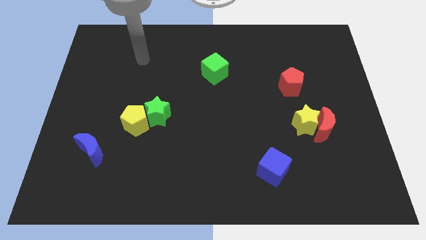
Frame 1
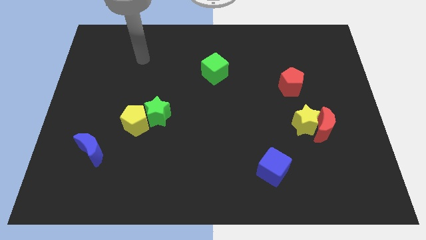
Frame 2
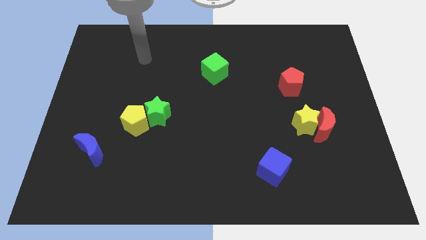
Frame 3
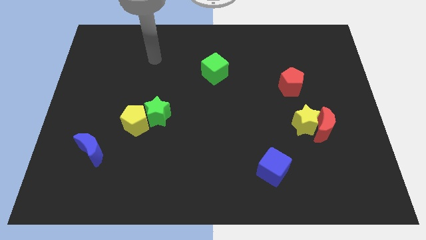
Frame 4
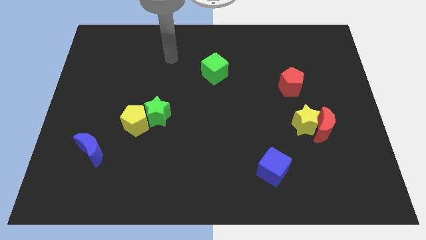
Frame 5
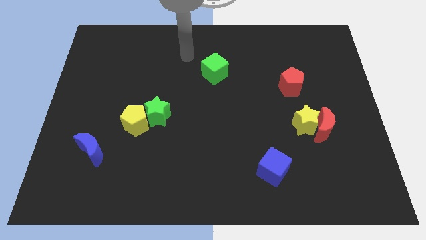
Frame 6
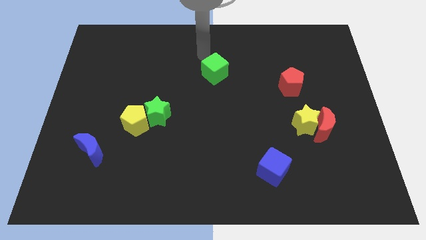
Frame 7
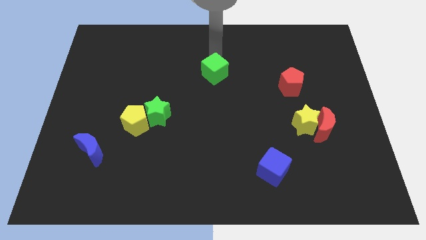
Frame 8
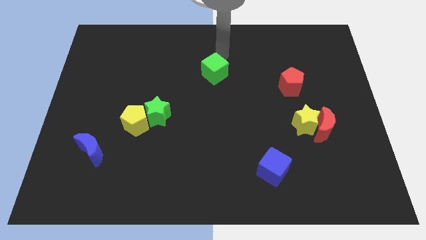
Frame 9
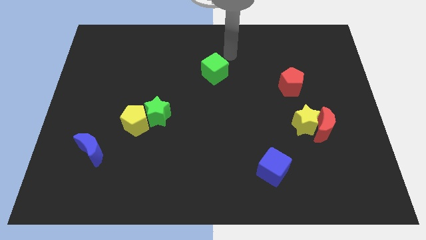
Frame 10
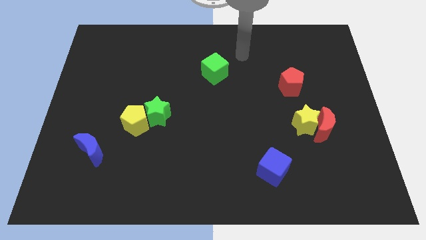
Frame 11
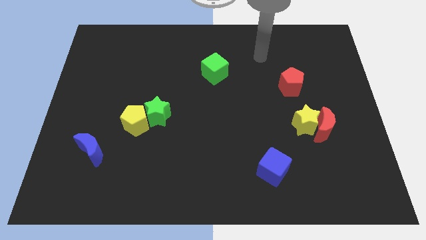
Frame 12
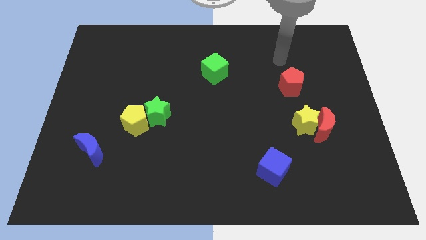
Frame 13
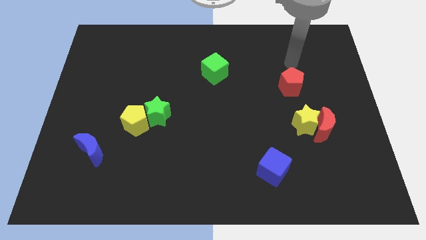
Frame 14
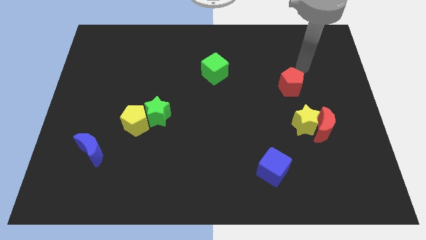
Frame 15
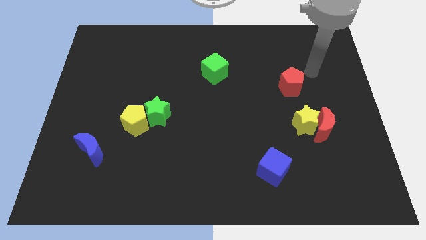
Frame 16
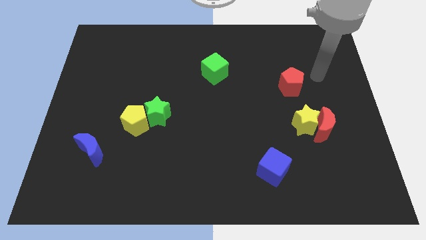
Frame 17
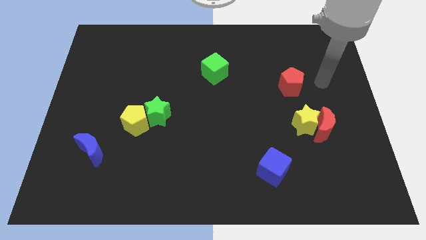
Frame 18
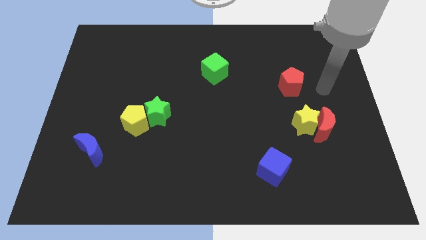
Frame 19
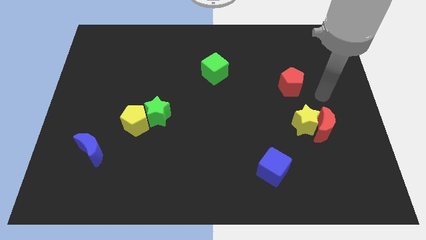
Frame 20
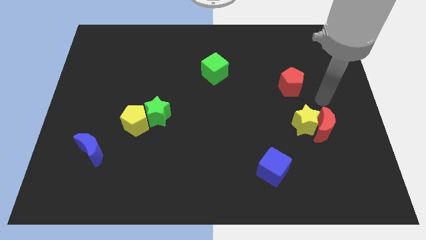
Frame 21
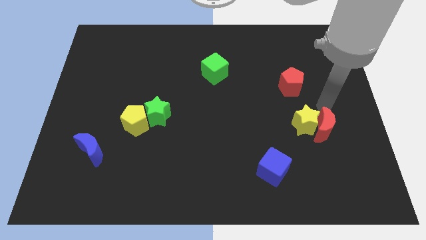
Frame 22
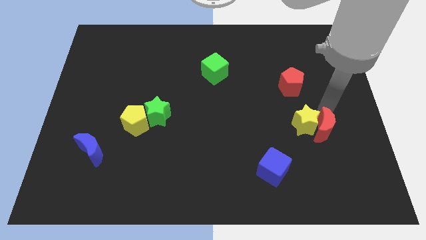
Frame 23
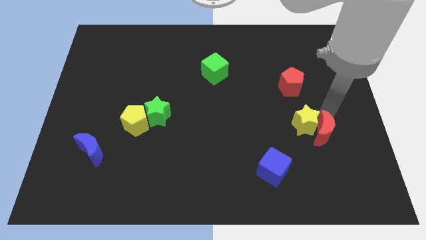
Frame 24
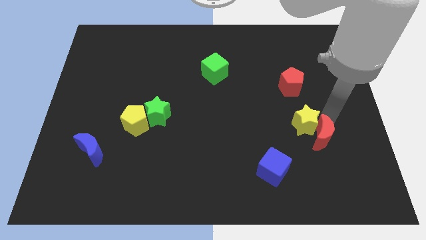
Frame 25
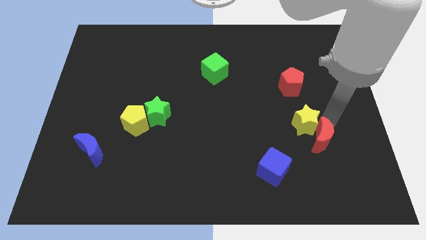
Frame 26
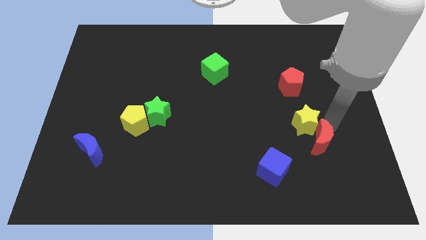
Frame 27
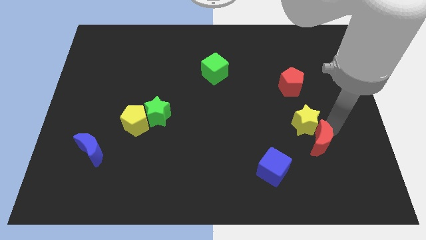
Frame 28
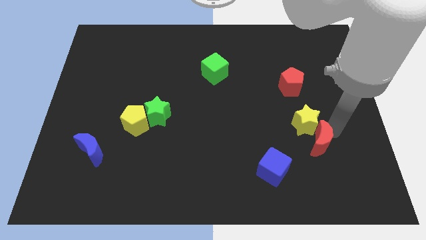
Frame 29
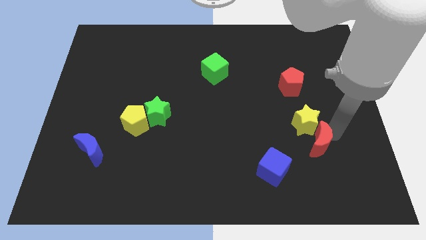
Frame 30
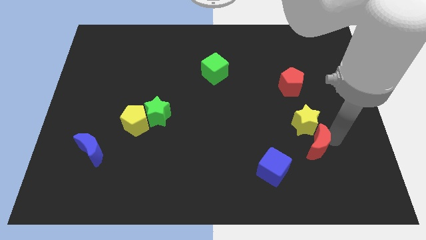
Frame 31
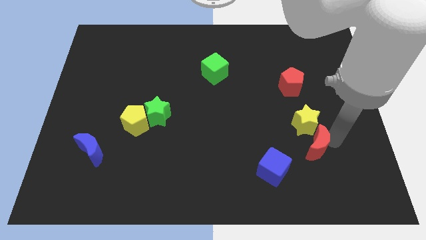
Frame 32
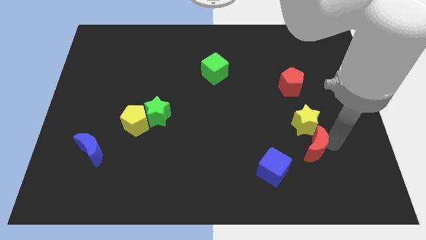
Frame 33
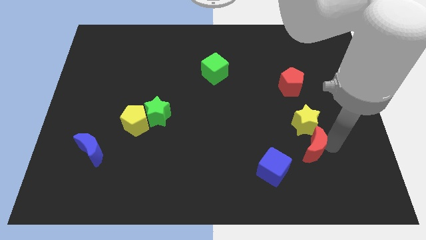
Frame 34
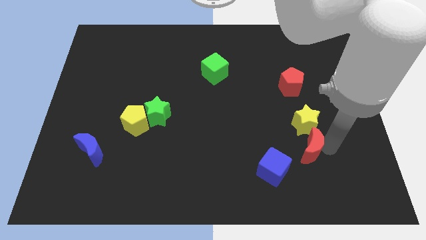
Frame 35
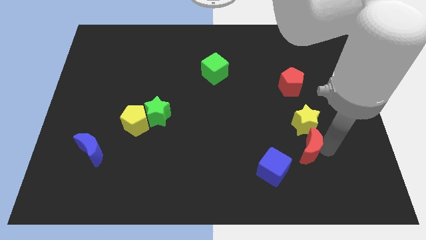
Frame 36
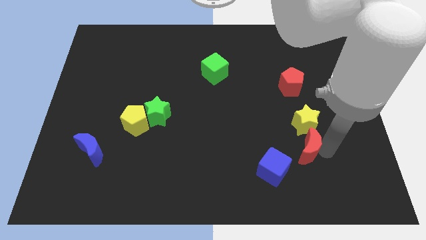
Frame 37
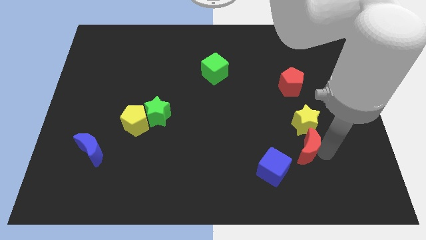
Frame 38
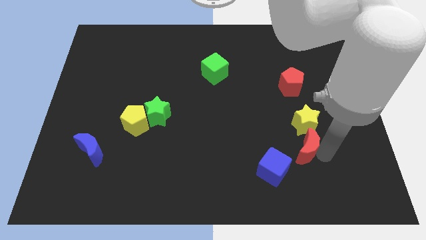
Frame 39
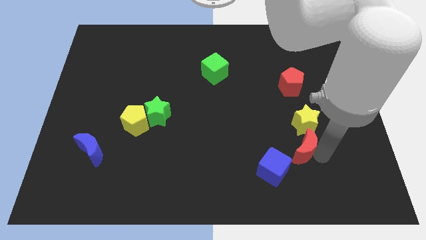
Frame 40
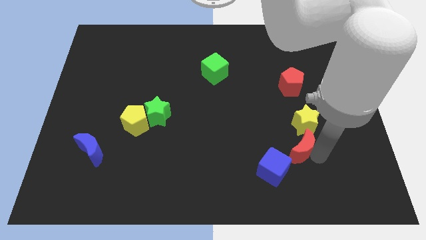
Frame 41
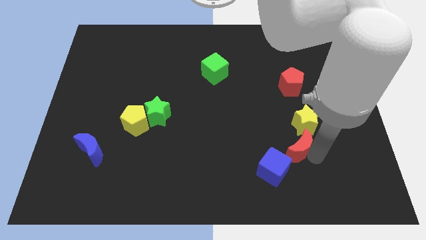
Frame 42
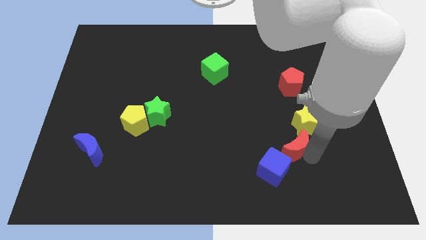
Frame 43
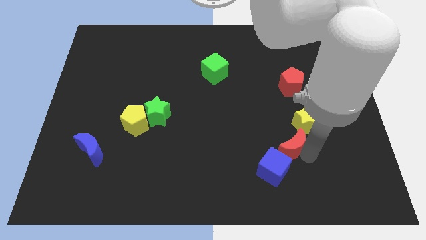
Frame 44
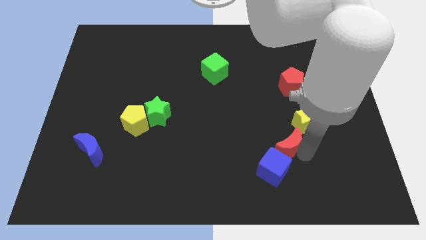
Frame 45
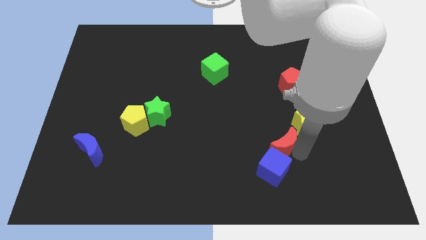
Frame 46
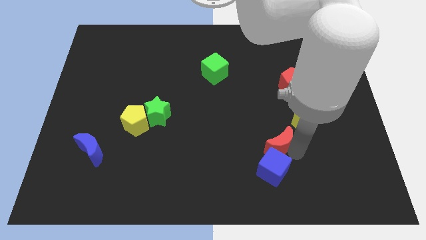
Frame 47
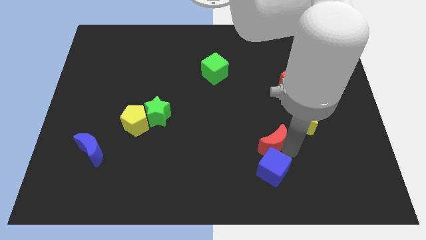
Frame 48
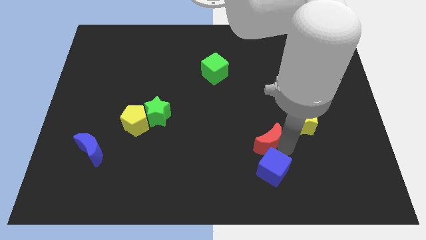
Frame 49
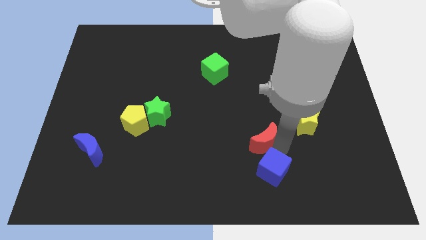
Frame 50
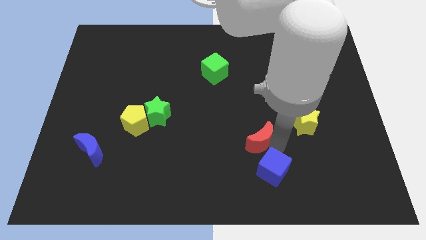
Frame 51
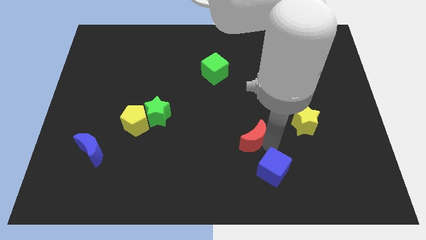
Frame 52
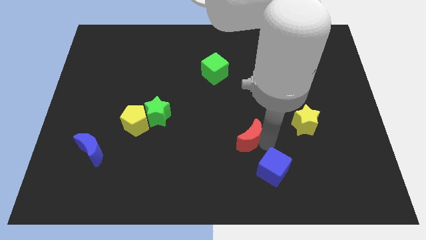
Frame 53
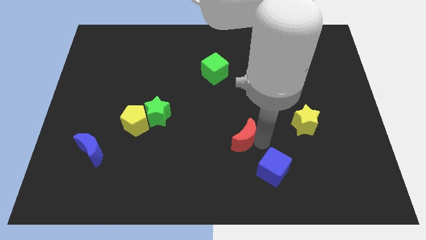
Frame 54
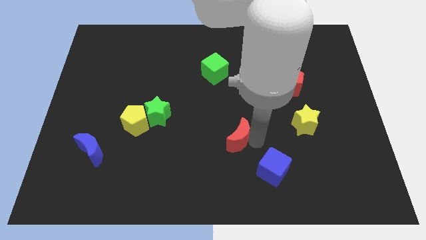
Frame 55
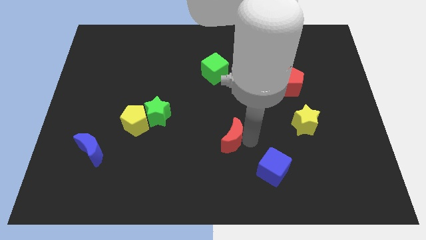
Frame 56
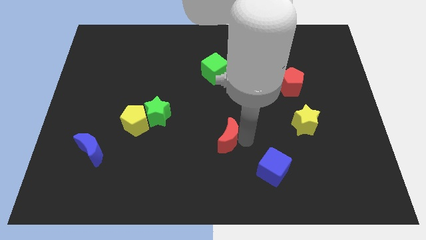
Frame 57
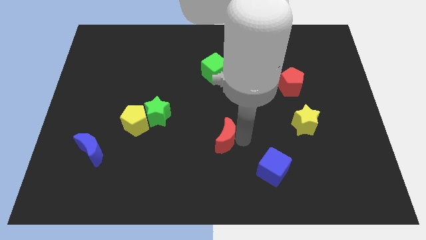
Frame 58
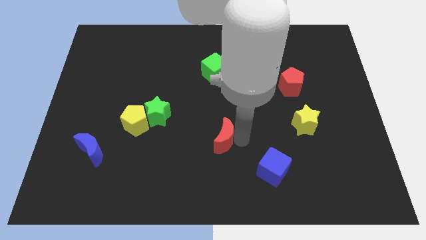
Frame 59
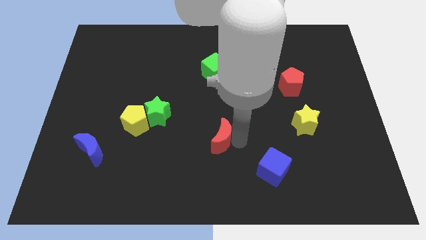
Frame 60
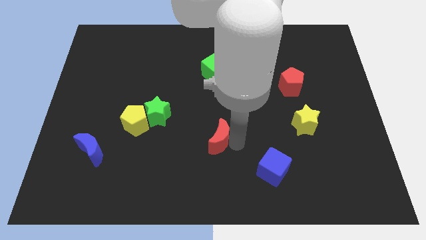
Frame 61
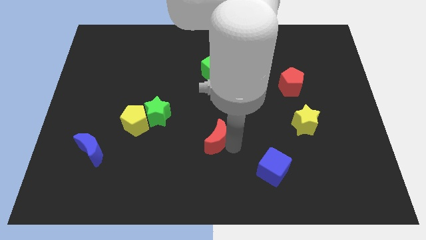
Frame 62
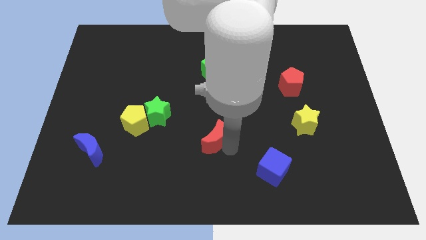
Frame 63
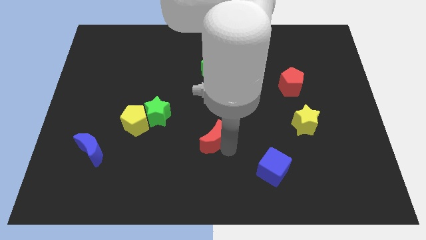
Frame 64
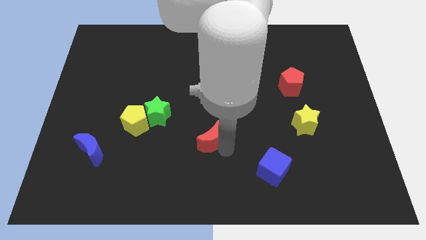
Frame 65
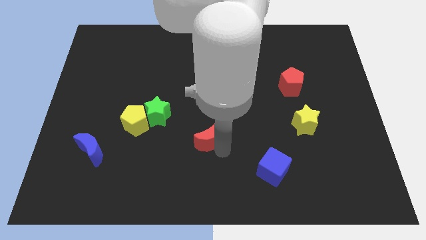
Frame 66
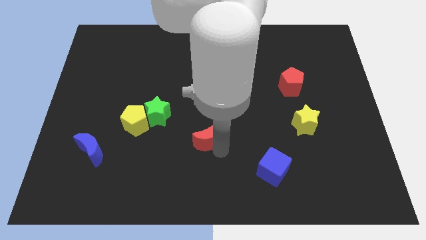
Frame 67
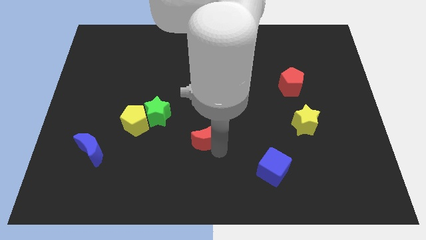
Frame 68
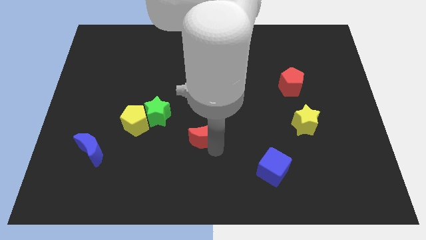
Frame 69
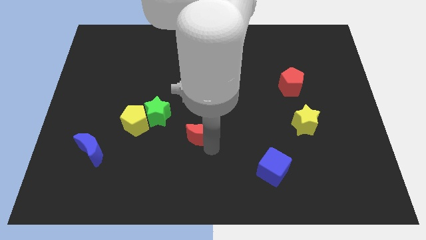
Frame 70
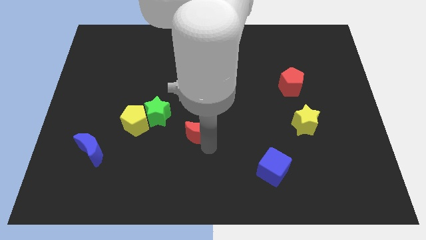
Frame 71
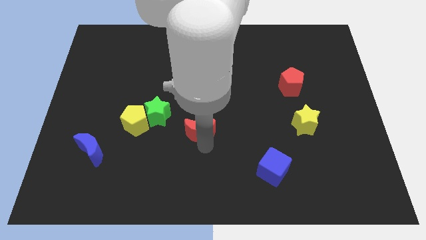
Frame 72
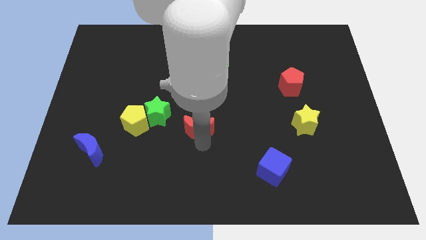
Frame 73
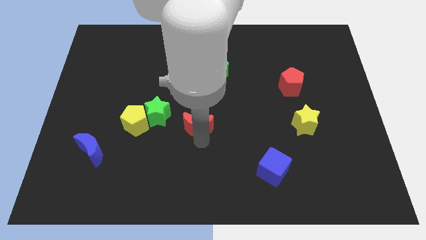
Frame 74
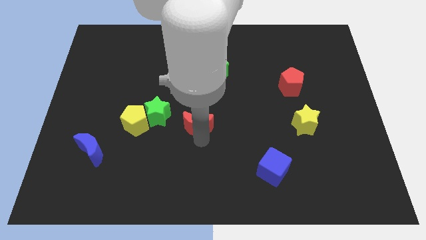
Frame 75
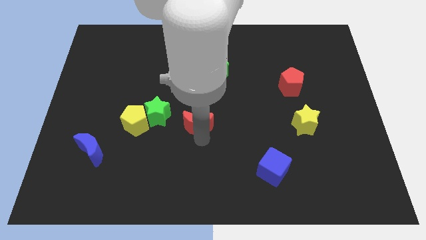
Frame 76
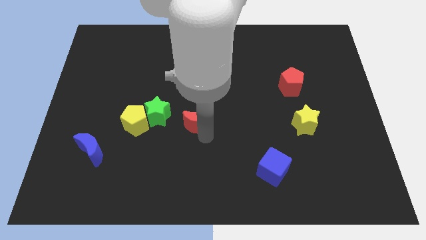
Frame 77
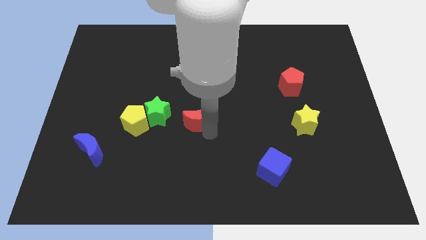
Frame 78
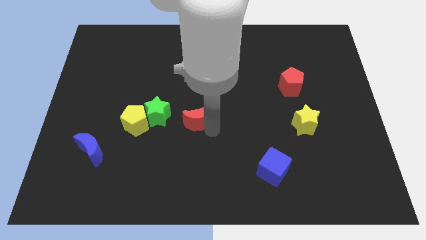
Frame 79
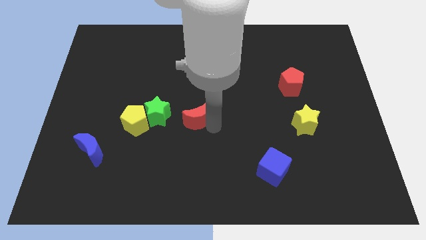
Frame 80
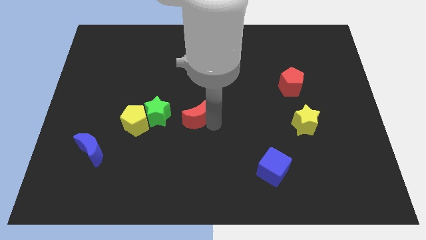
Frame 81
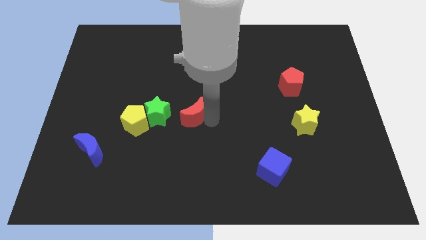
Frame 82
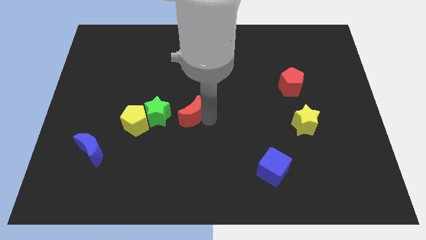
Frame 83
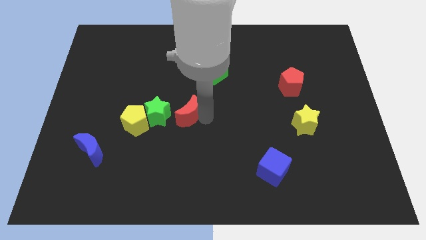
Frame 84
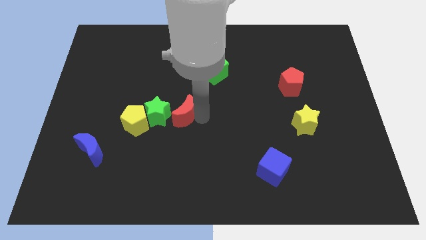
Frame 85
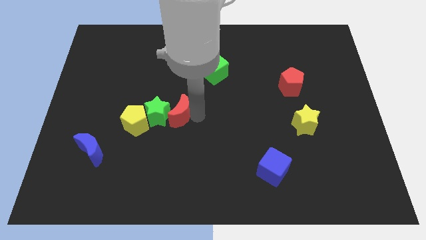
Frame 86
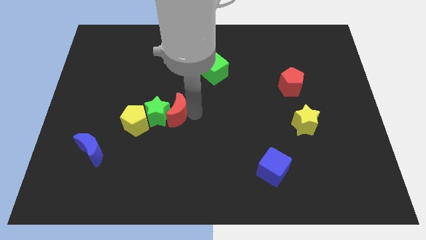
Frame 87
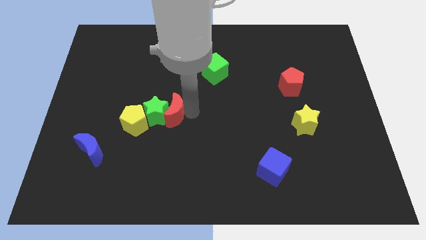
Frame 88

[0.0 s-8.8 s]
slide the red moon towards the green star
